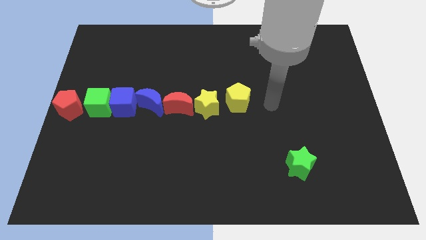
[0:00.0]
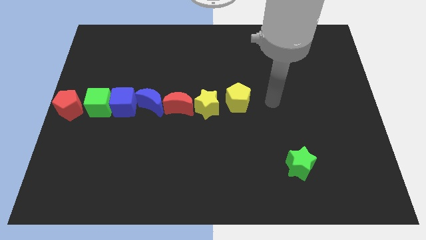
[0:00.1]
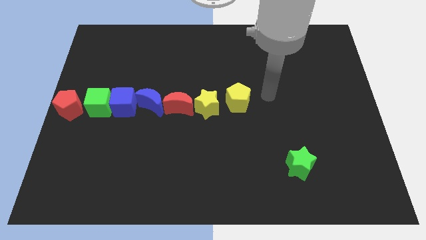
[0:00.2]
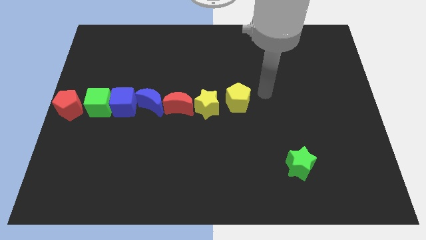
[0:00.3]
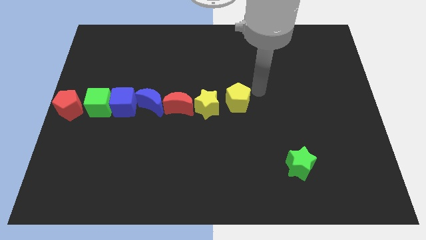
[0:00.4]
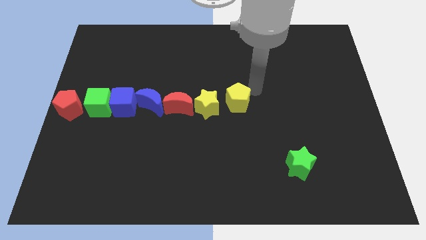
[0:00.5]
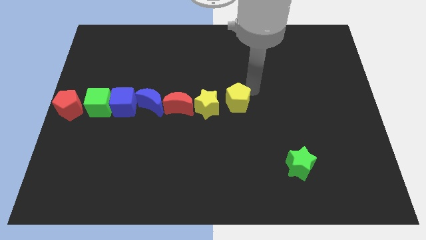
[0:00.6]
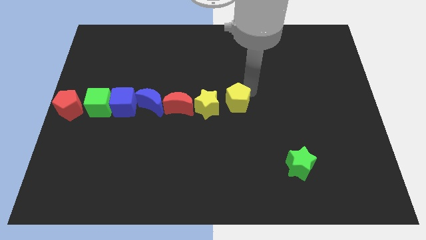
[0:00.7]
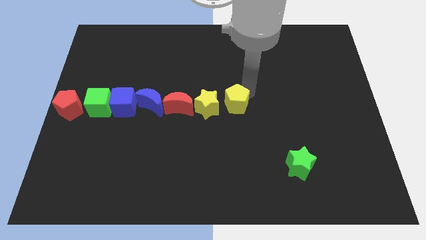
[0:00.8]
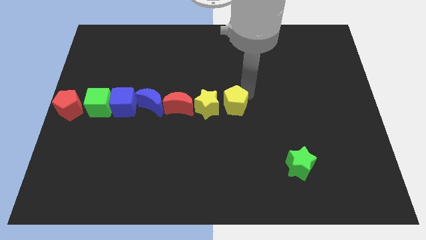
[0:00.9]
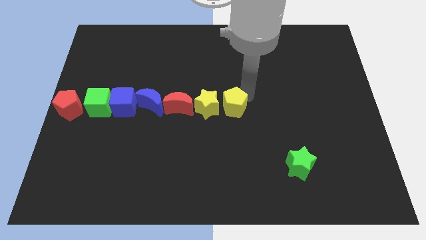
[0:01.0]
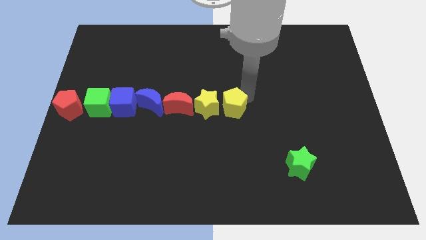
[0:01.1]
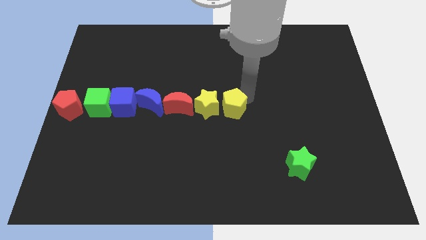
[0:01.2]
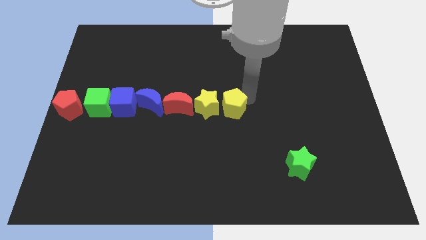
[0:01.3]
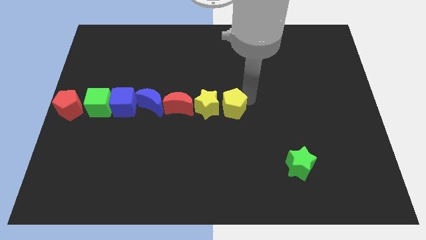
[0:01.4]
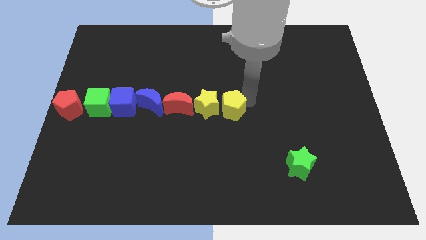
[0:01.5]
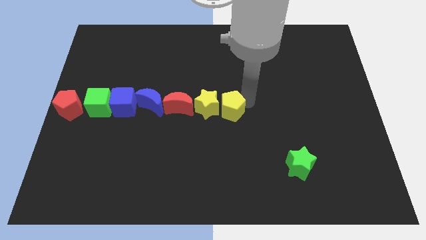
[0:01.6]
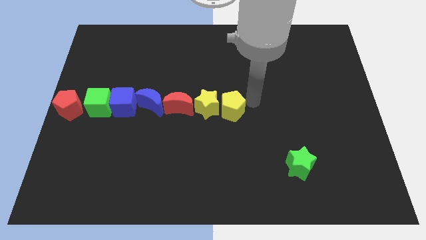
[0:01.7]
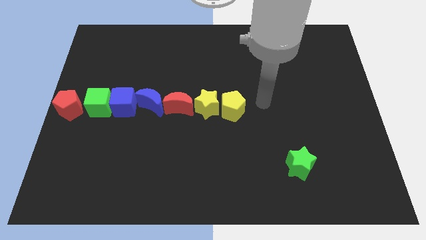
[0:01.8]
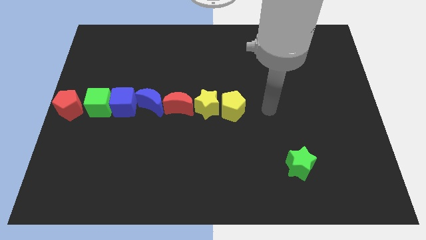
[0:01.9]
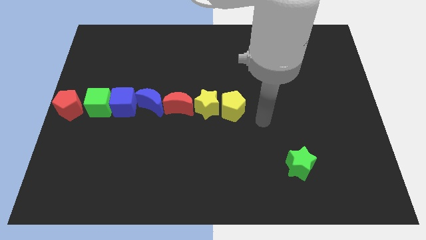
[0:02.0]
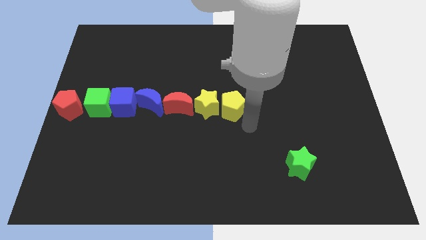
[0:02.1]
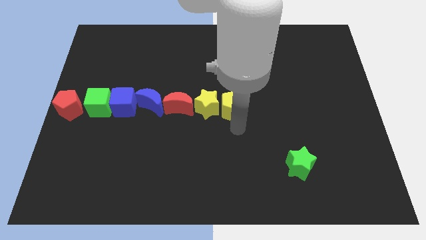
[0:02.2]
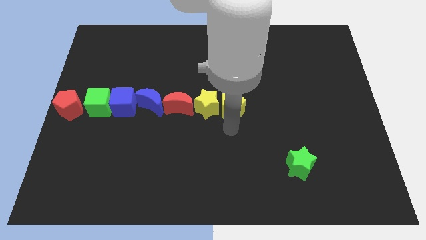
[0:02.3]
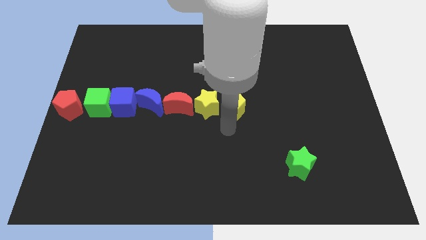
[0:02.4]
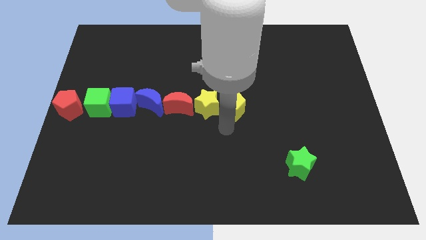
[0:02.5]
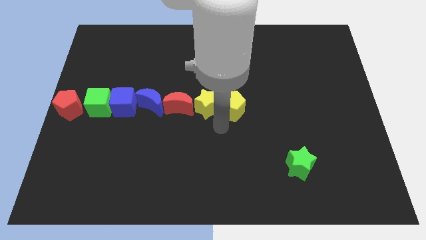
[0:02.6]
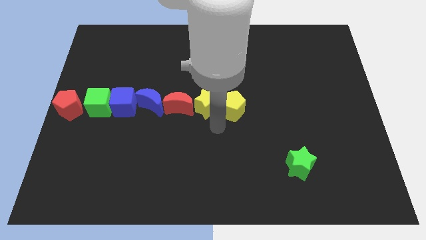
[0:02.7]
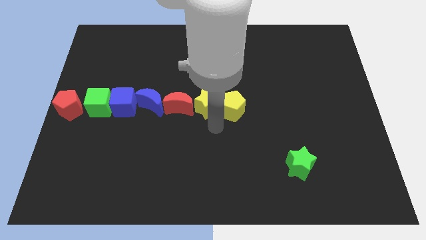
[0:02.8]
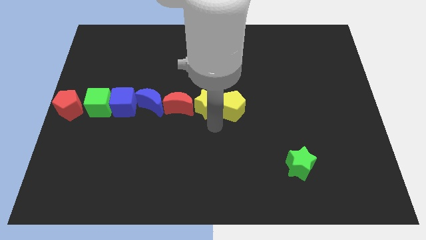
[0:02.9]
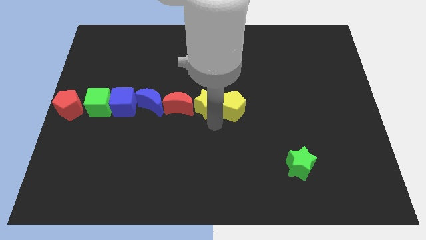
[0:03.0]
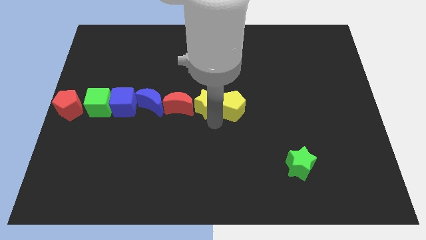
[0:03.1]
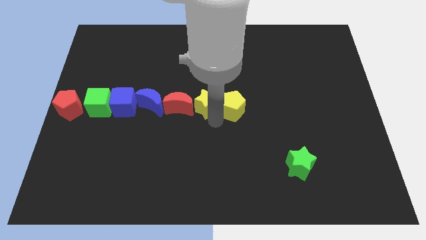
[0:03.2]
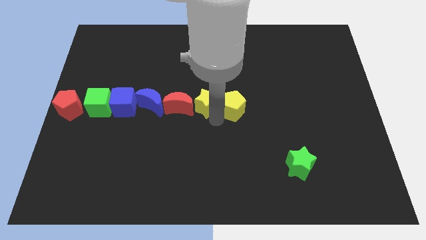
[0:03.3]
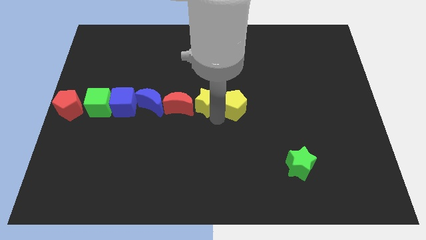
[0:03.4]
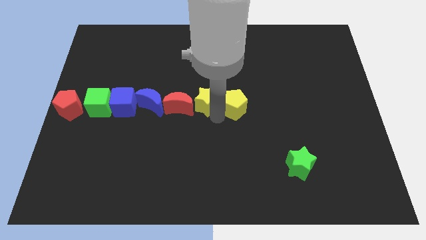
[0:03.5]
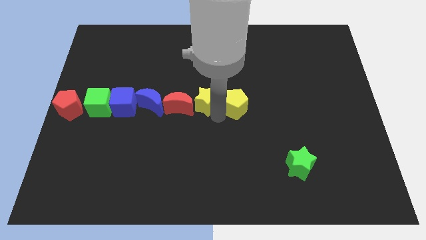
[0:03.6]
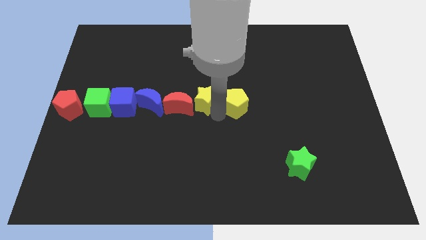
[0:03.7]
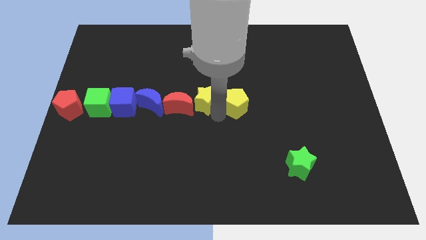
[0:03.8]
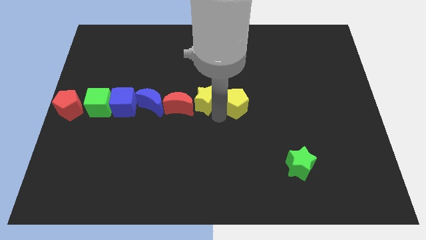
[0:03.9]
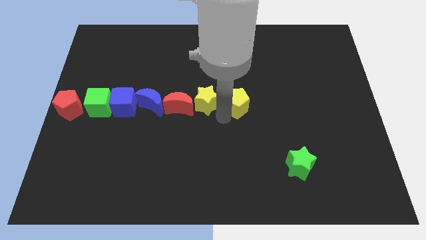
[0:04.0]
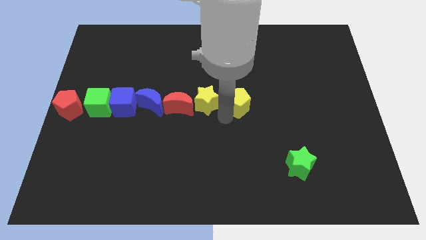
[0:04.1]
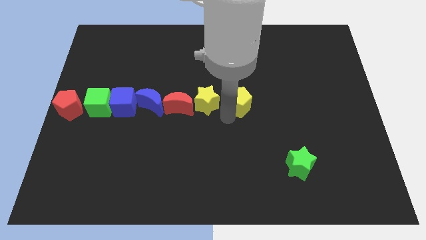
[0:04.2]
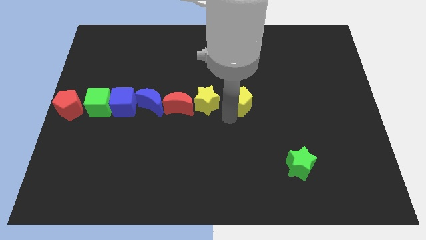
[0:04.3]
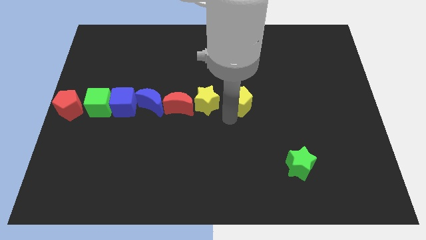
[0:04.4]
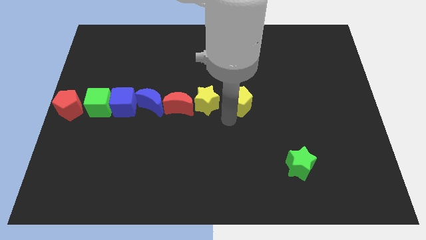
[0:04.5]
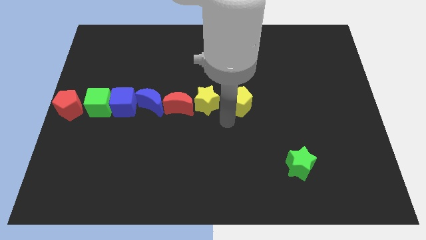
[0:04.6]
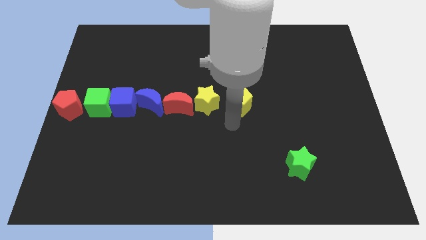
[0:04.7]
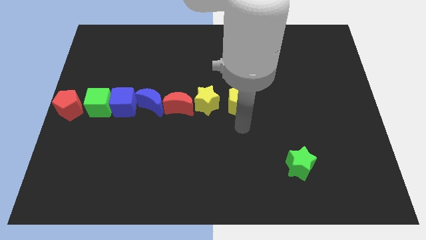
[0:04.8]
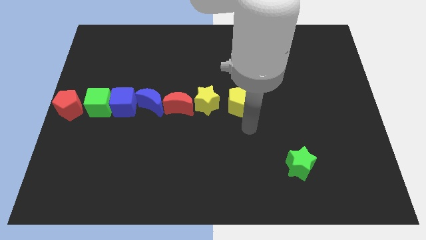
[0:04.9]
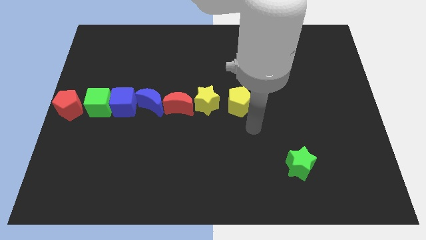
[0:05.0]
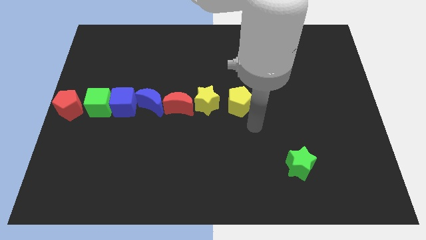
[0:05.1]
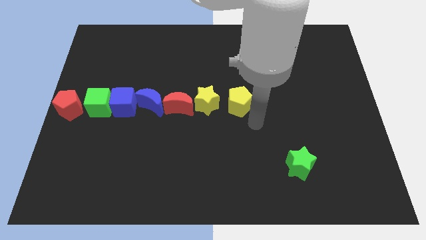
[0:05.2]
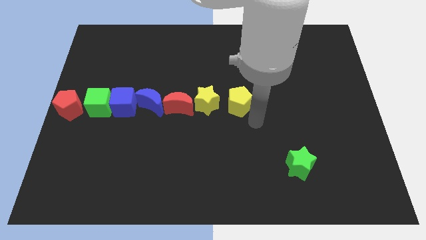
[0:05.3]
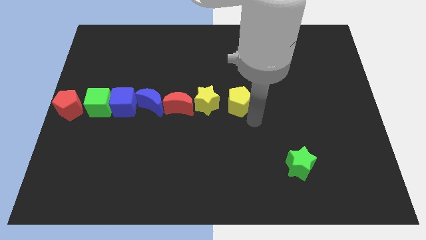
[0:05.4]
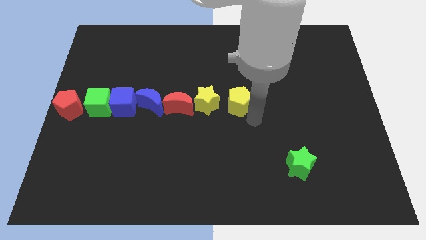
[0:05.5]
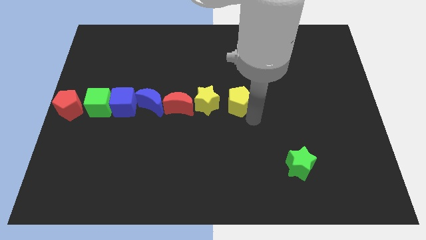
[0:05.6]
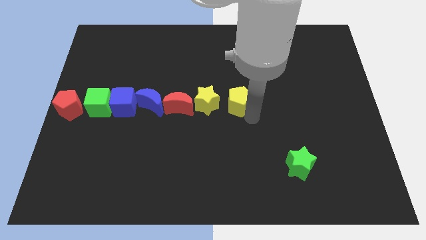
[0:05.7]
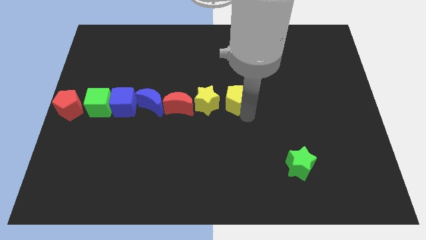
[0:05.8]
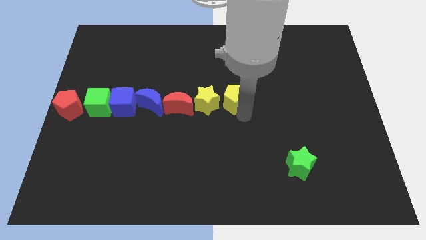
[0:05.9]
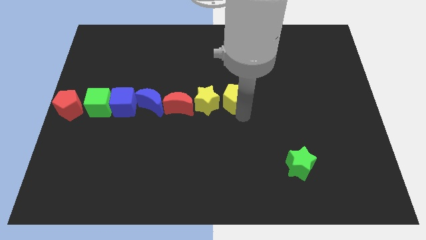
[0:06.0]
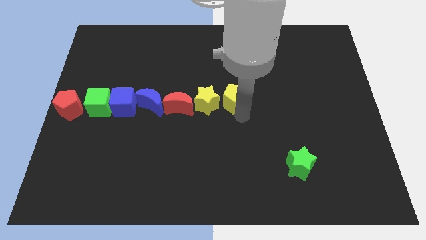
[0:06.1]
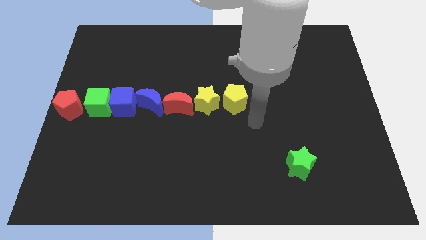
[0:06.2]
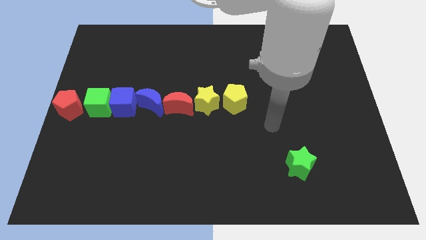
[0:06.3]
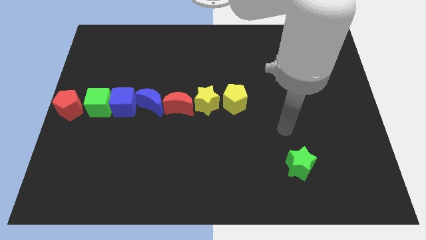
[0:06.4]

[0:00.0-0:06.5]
adjust the yellow pentagon to form a horizontal line with a group of blocks

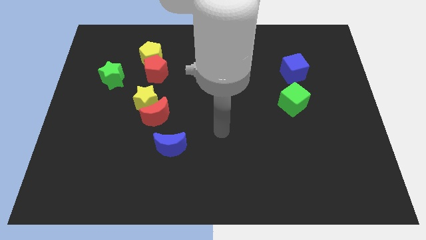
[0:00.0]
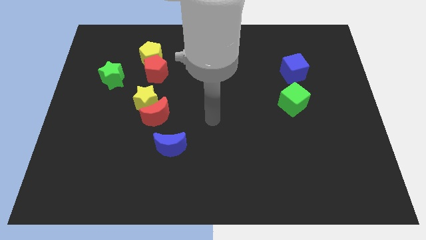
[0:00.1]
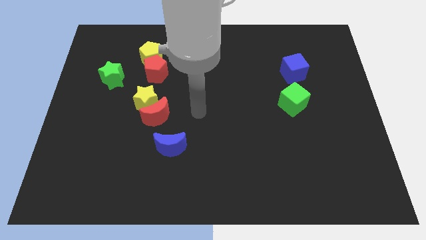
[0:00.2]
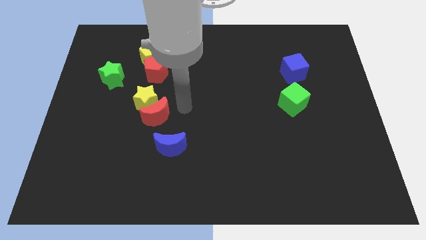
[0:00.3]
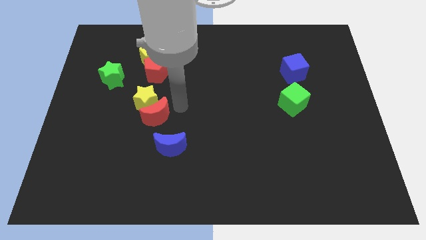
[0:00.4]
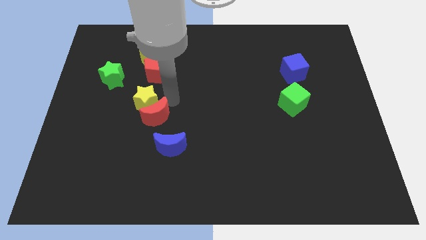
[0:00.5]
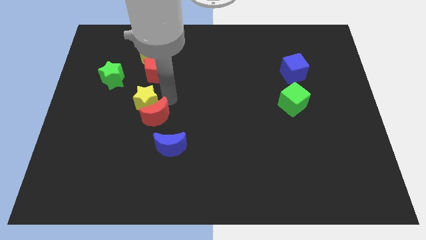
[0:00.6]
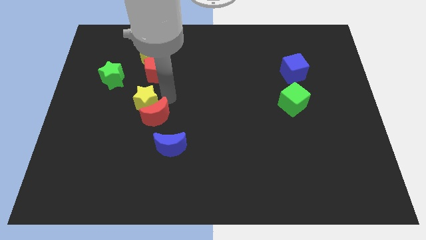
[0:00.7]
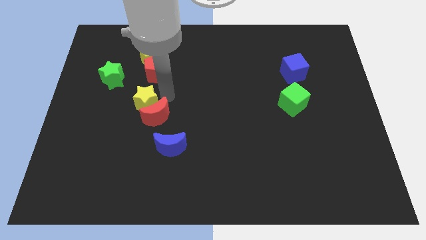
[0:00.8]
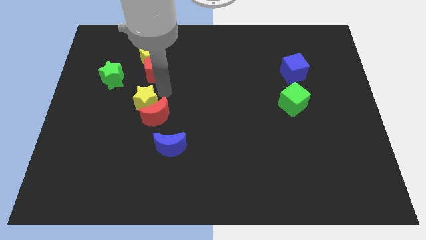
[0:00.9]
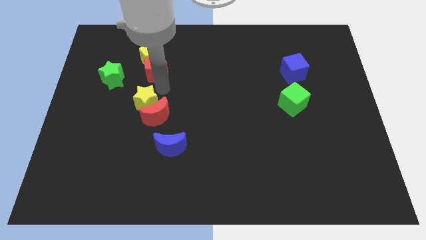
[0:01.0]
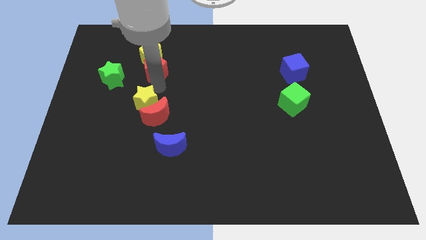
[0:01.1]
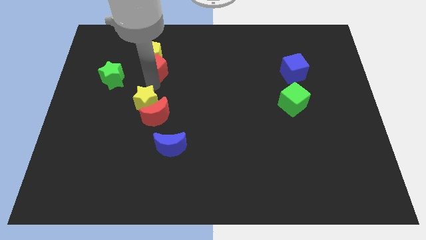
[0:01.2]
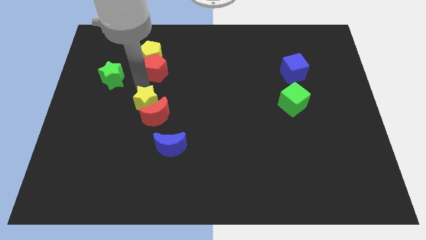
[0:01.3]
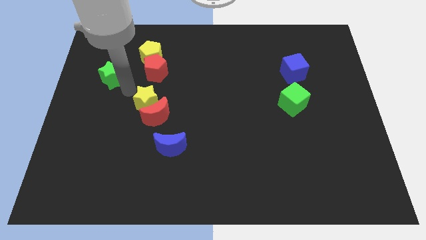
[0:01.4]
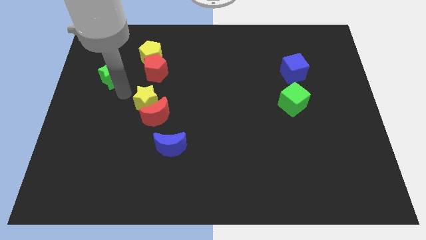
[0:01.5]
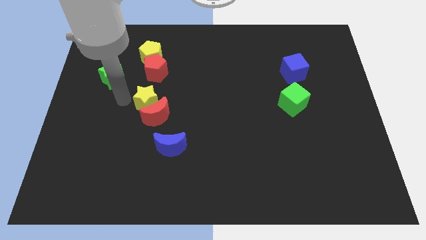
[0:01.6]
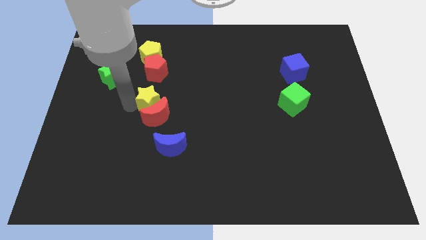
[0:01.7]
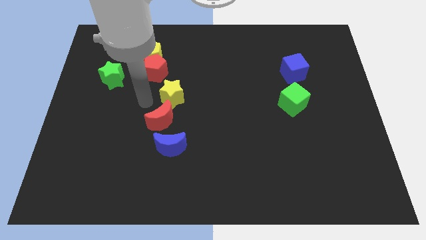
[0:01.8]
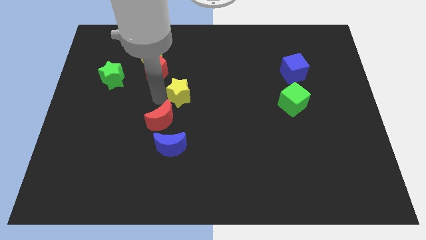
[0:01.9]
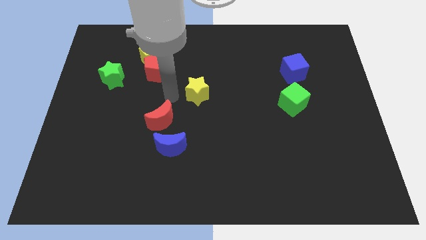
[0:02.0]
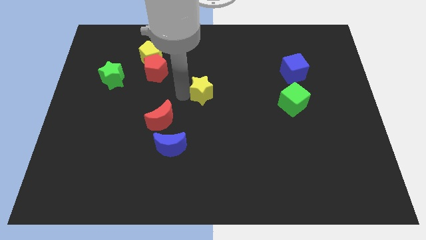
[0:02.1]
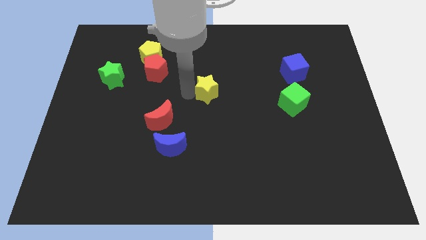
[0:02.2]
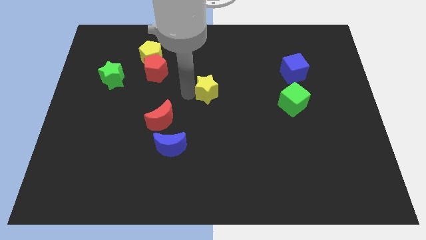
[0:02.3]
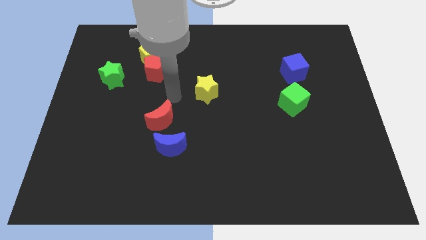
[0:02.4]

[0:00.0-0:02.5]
separate the yellow star and the red moon
